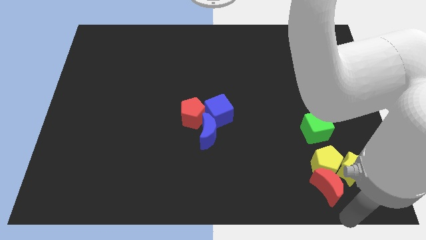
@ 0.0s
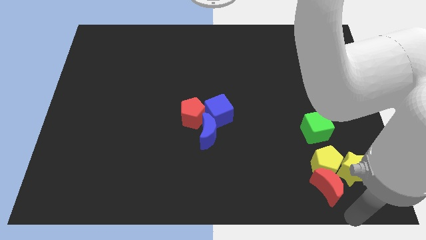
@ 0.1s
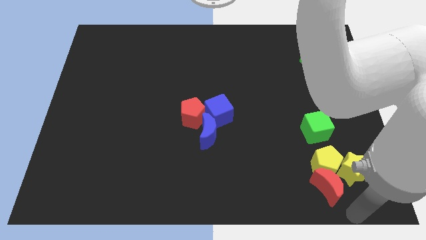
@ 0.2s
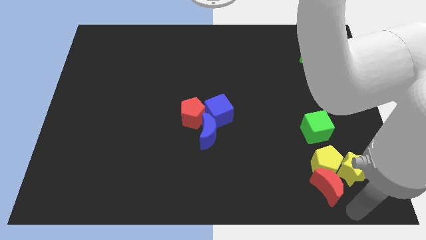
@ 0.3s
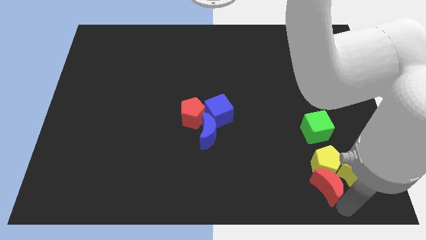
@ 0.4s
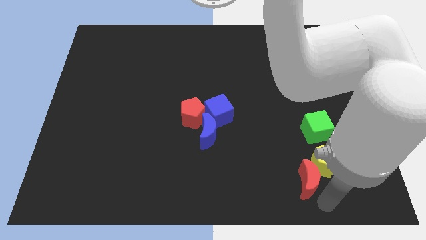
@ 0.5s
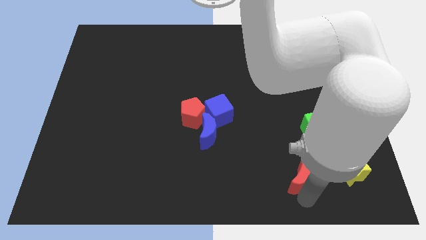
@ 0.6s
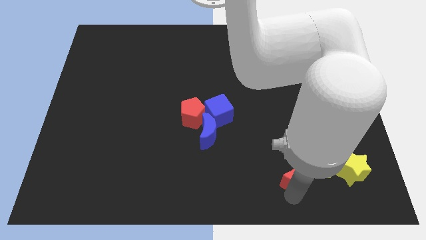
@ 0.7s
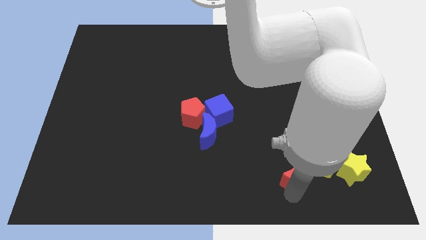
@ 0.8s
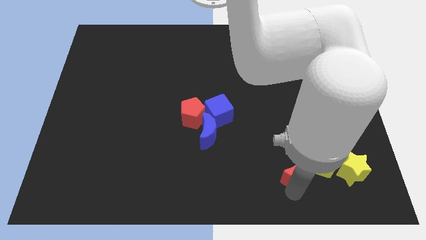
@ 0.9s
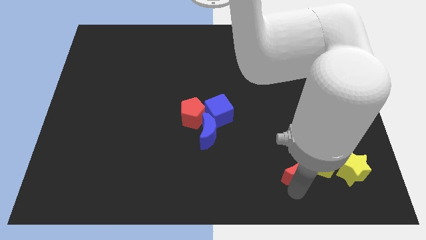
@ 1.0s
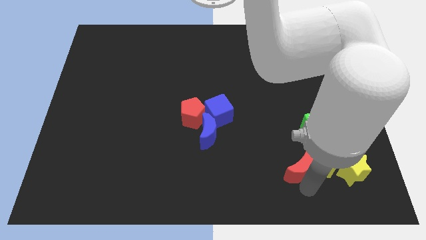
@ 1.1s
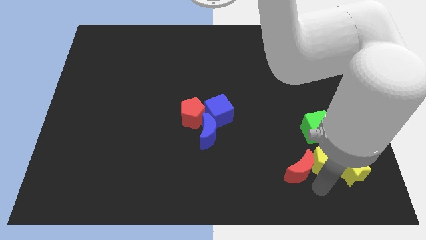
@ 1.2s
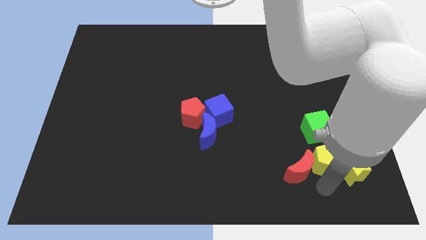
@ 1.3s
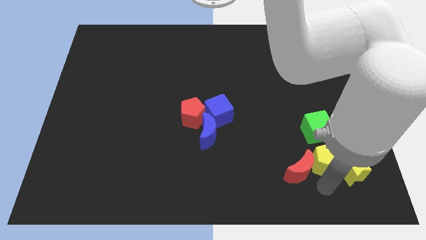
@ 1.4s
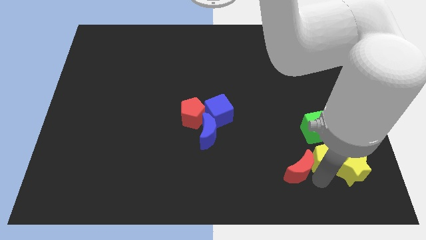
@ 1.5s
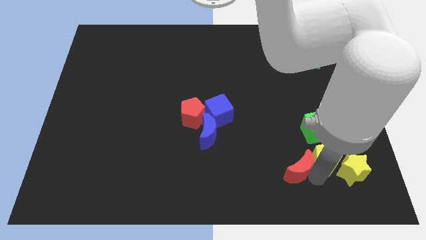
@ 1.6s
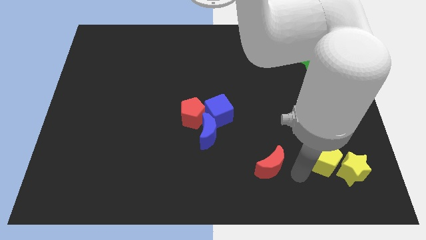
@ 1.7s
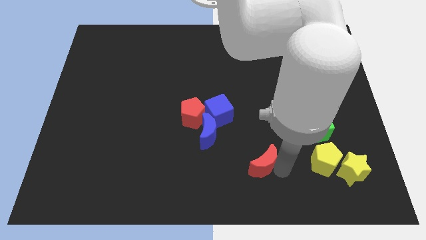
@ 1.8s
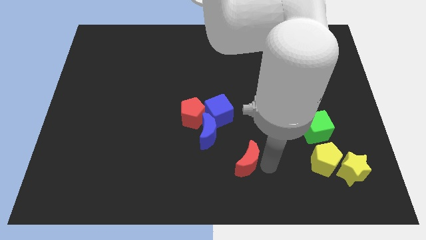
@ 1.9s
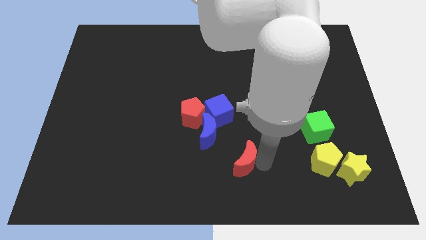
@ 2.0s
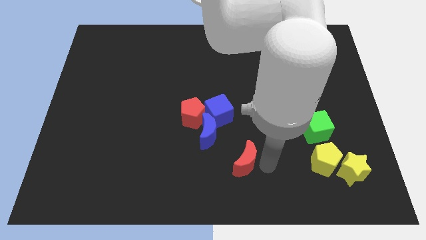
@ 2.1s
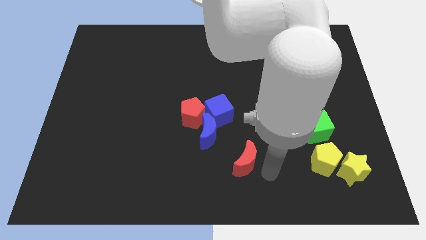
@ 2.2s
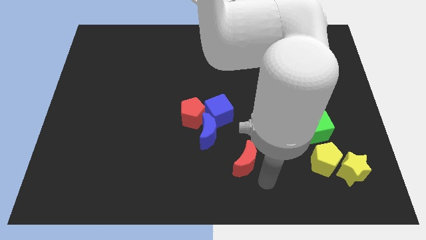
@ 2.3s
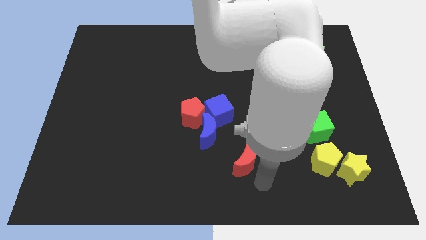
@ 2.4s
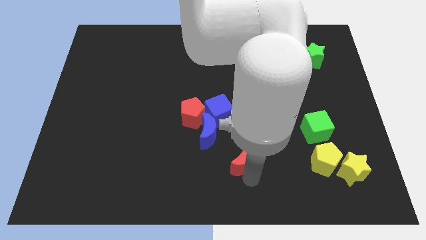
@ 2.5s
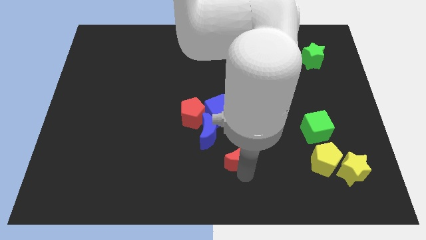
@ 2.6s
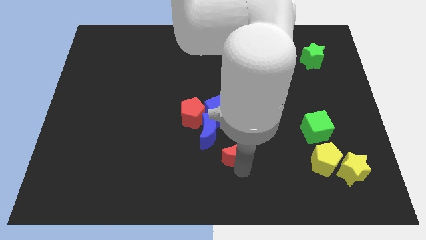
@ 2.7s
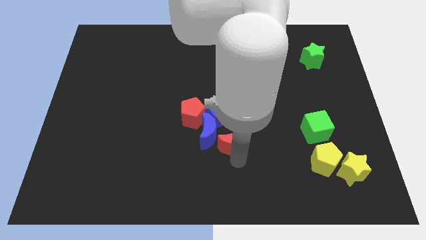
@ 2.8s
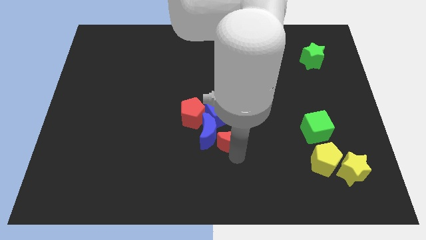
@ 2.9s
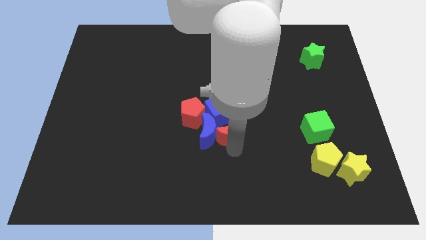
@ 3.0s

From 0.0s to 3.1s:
push red crescent below blue cube

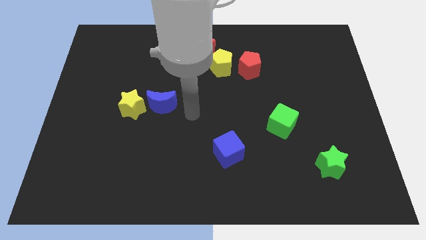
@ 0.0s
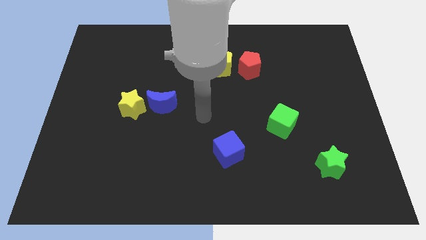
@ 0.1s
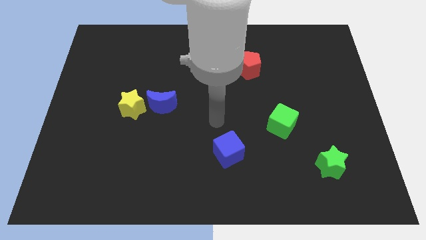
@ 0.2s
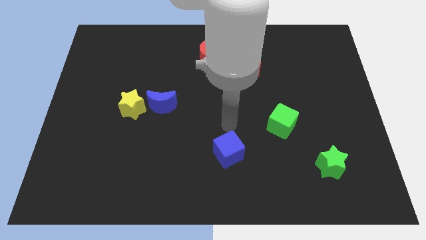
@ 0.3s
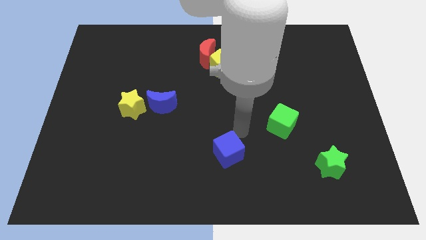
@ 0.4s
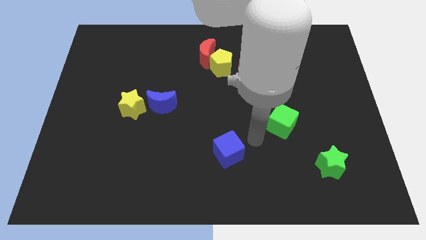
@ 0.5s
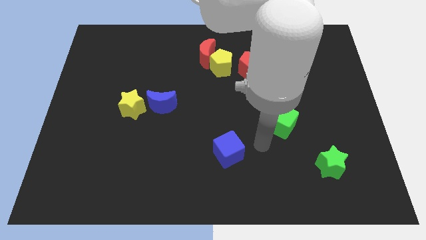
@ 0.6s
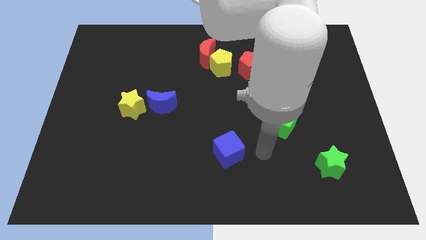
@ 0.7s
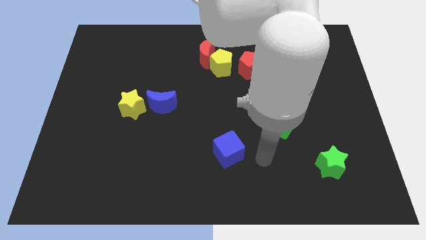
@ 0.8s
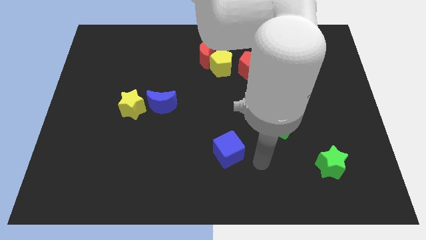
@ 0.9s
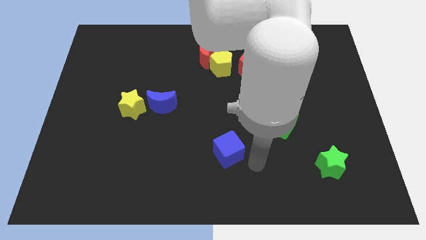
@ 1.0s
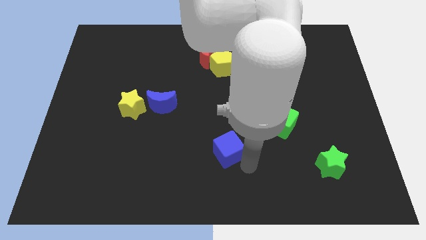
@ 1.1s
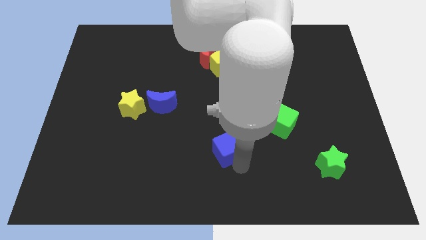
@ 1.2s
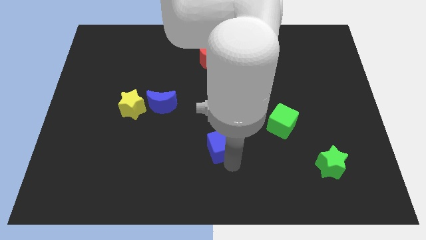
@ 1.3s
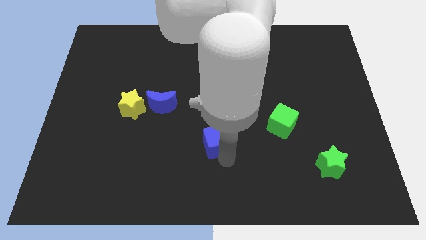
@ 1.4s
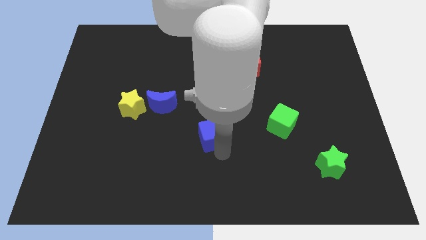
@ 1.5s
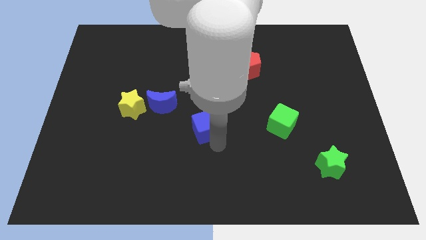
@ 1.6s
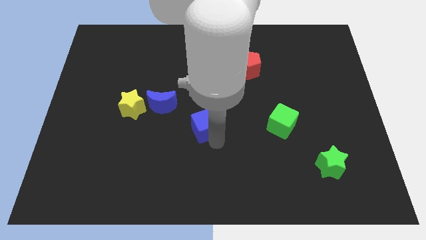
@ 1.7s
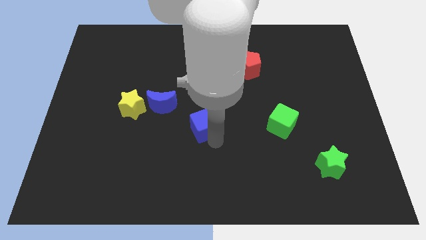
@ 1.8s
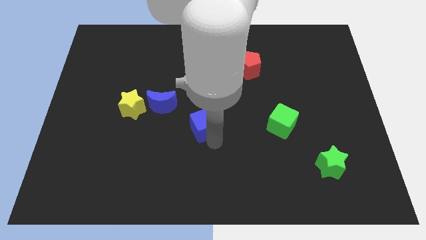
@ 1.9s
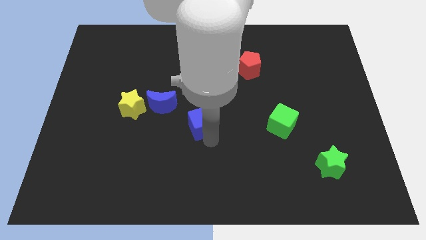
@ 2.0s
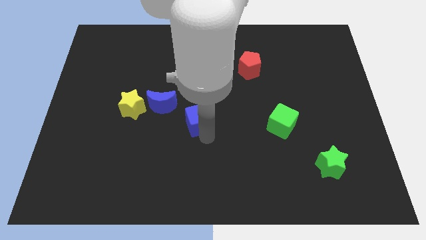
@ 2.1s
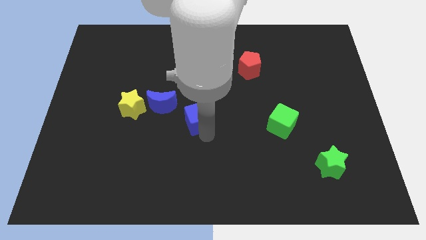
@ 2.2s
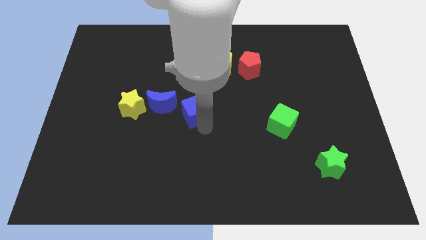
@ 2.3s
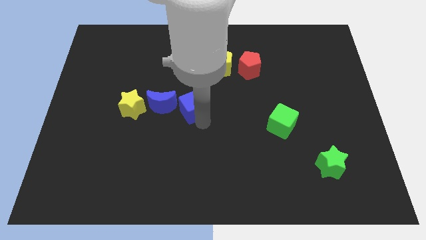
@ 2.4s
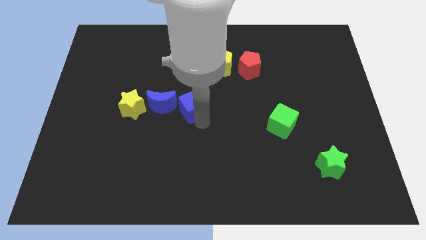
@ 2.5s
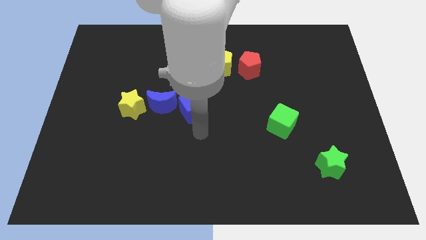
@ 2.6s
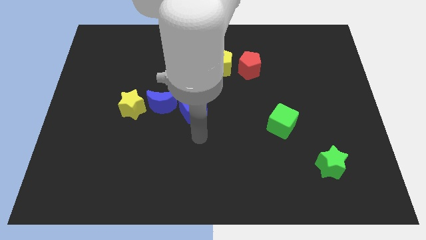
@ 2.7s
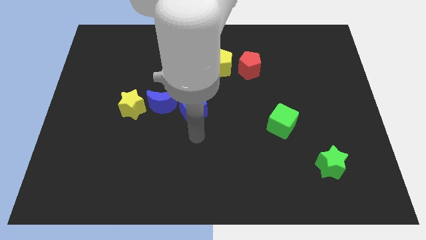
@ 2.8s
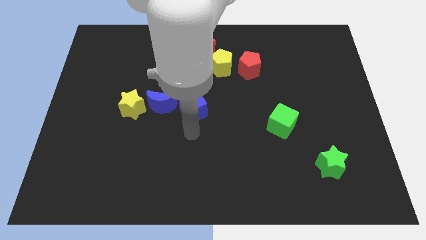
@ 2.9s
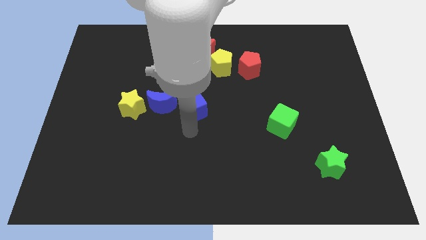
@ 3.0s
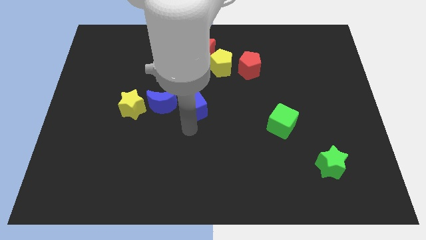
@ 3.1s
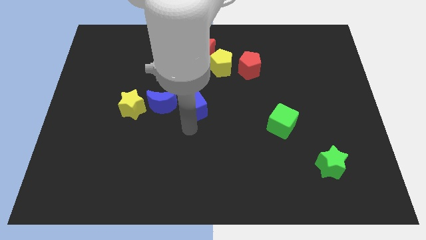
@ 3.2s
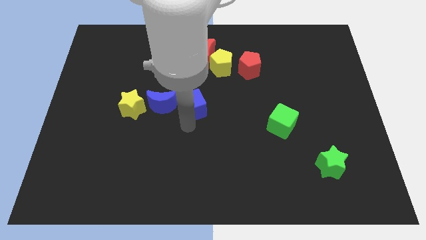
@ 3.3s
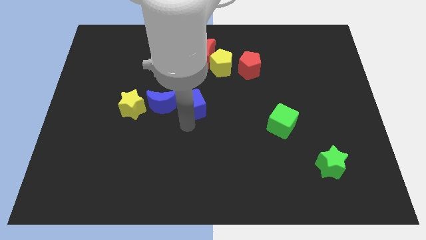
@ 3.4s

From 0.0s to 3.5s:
move the blue cube towards the center of the board

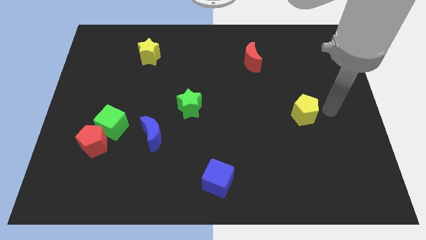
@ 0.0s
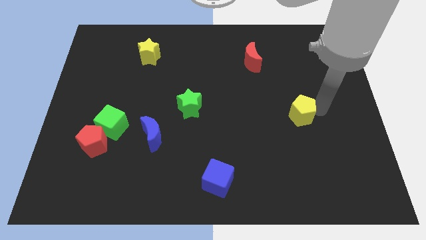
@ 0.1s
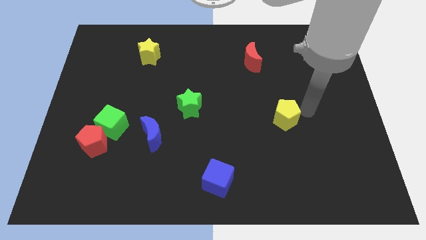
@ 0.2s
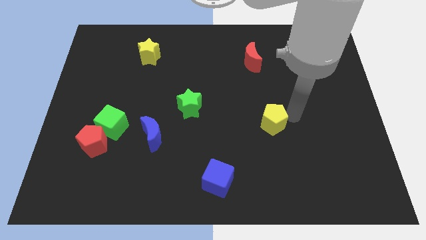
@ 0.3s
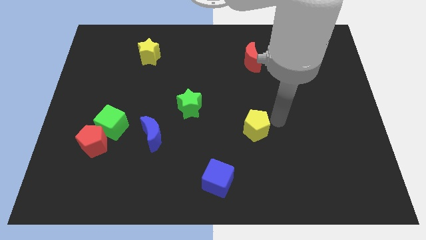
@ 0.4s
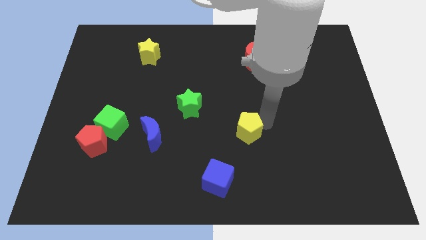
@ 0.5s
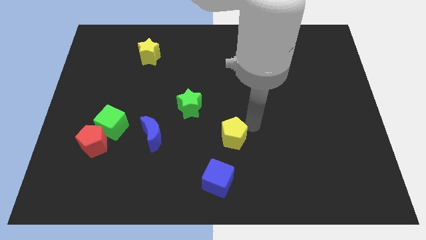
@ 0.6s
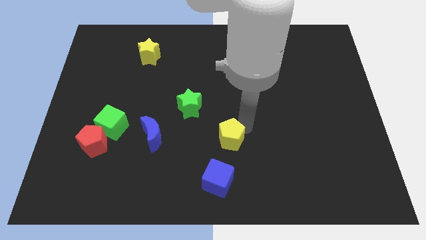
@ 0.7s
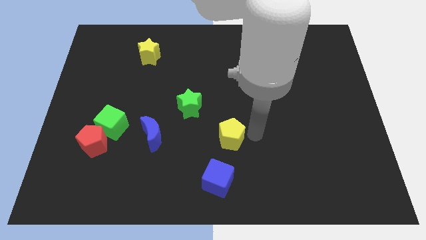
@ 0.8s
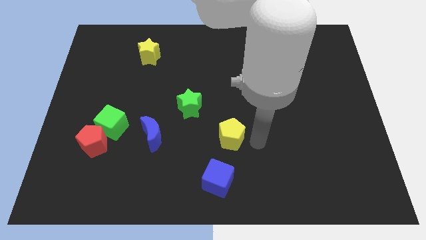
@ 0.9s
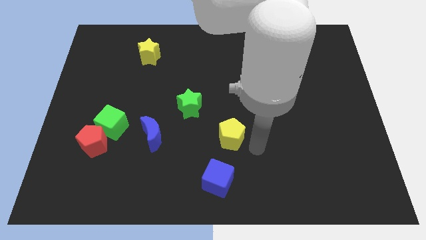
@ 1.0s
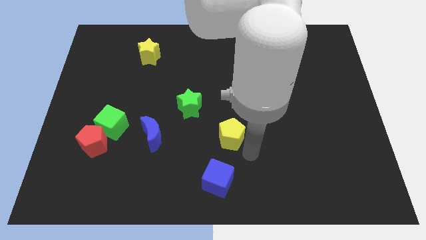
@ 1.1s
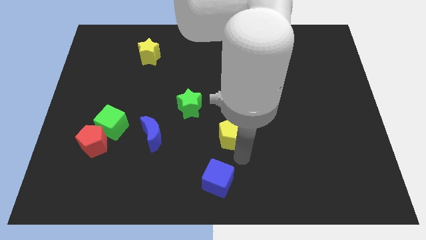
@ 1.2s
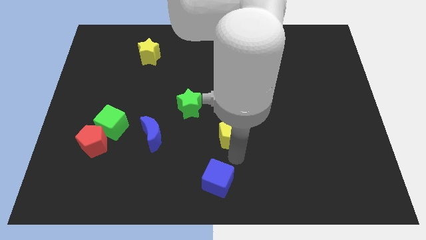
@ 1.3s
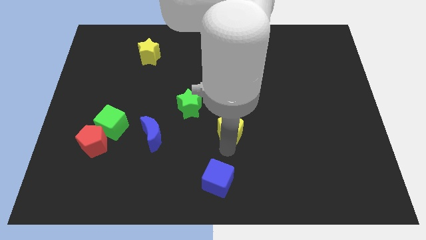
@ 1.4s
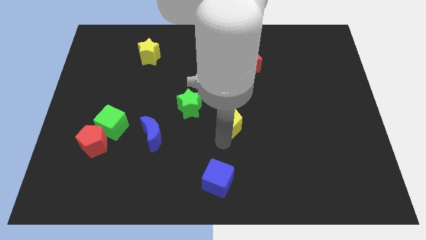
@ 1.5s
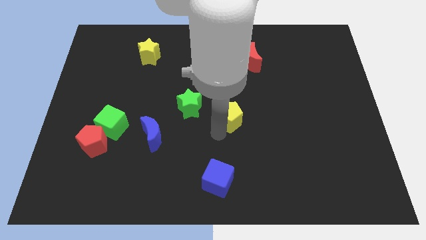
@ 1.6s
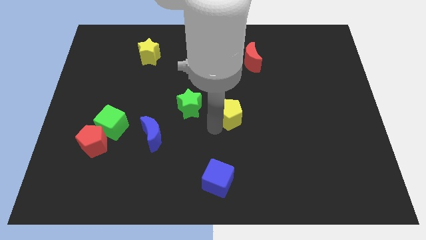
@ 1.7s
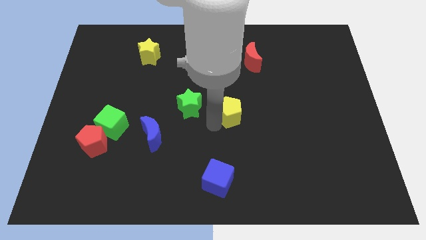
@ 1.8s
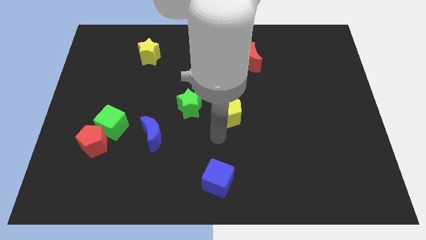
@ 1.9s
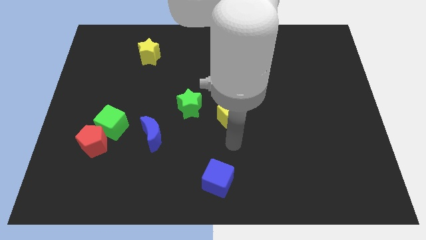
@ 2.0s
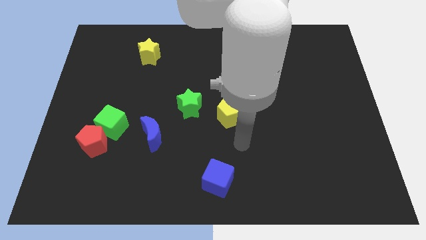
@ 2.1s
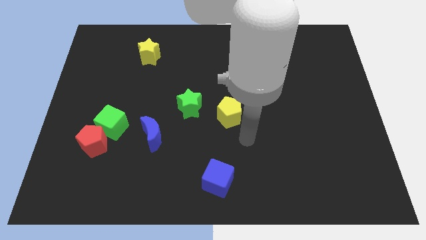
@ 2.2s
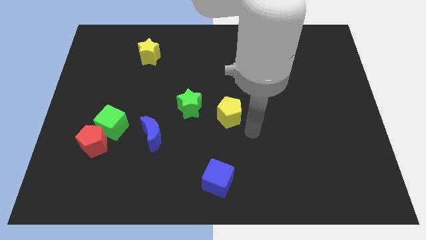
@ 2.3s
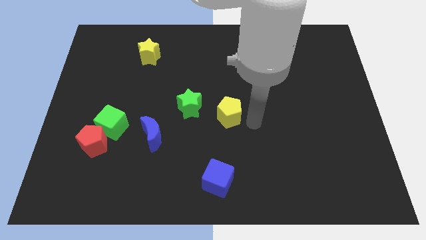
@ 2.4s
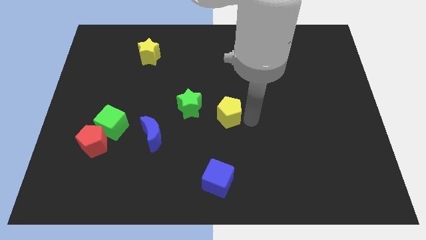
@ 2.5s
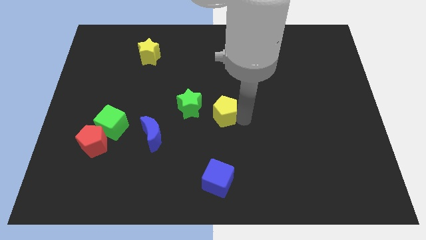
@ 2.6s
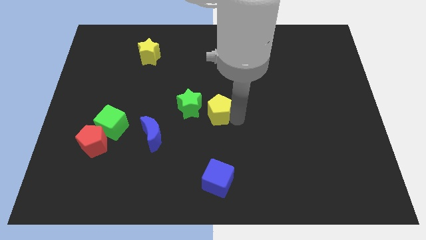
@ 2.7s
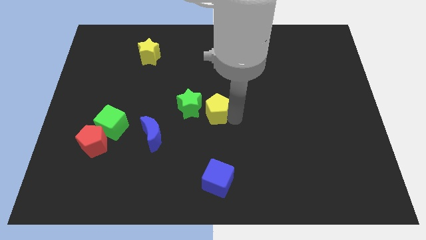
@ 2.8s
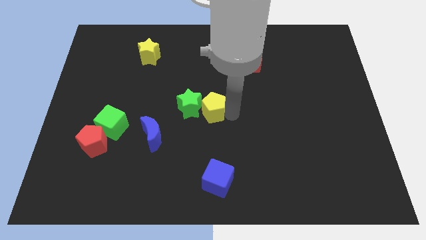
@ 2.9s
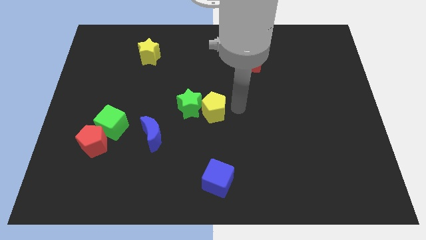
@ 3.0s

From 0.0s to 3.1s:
move the yellow pentagon close to the right side of the green star
